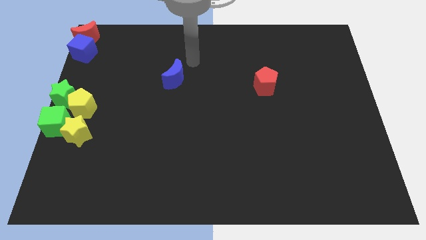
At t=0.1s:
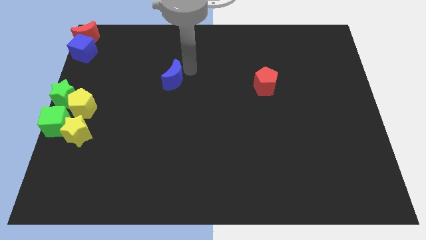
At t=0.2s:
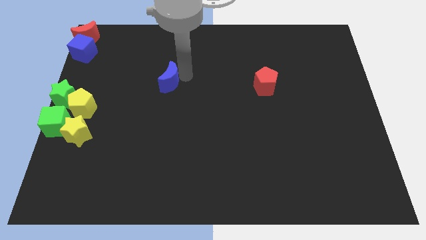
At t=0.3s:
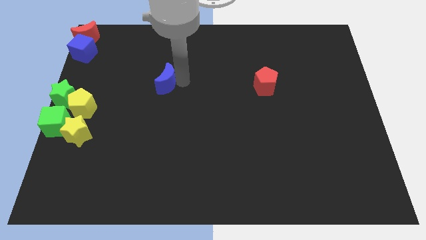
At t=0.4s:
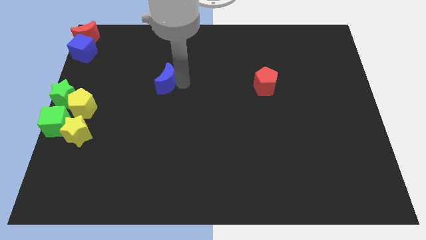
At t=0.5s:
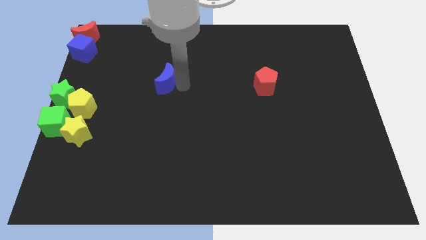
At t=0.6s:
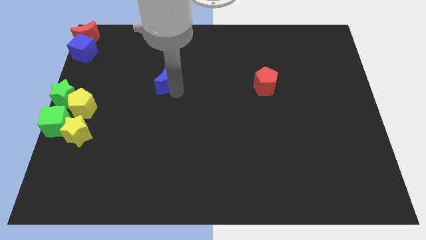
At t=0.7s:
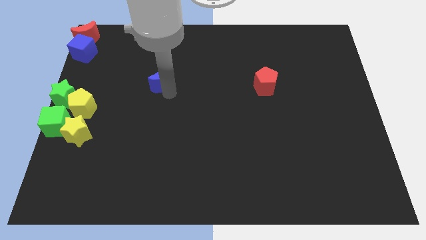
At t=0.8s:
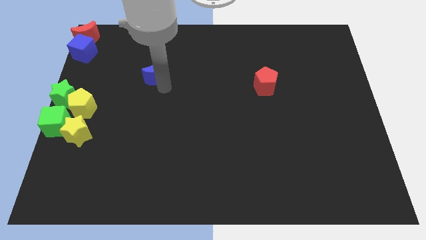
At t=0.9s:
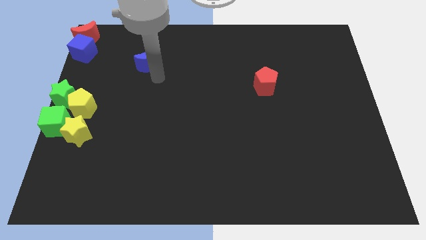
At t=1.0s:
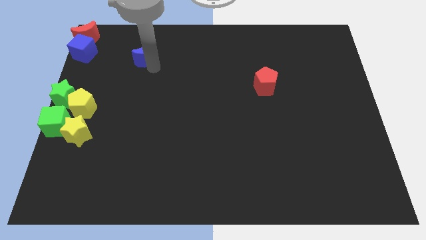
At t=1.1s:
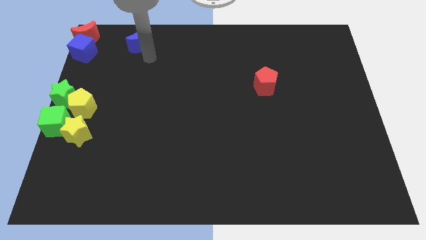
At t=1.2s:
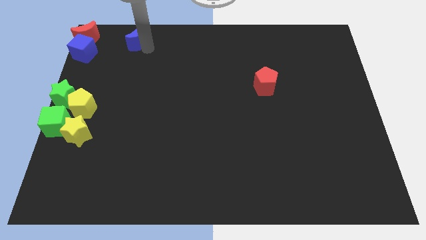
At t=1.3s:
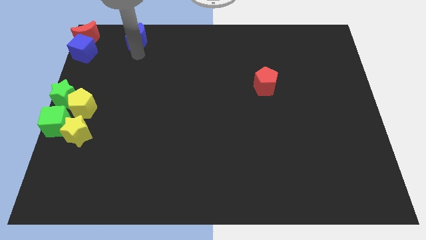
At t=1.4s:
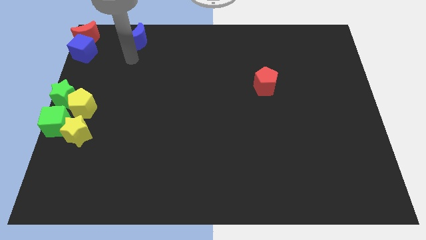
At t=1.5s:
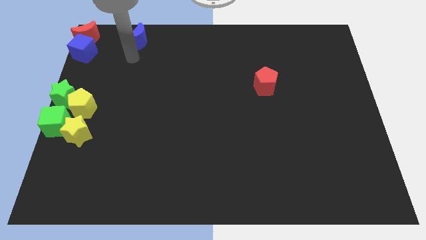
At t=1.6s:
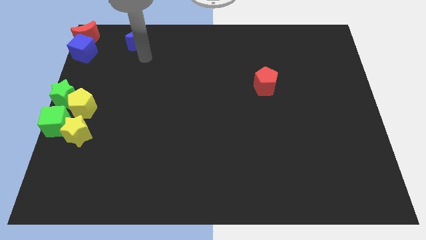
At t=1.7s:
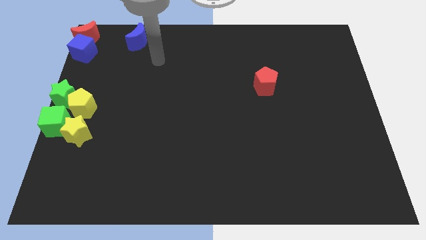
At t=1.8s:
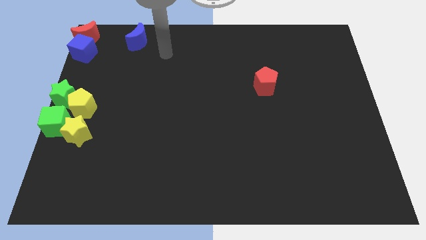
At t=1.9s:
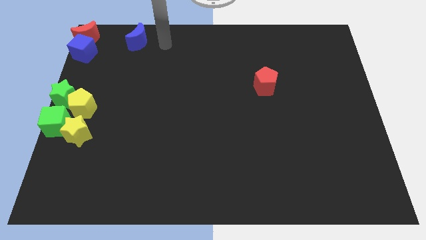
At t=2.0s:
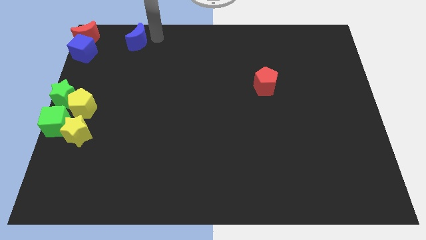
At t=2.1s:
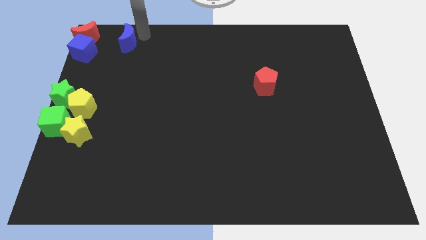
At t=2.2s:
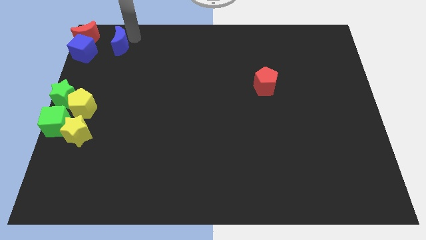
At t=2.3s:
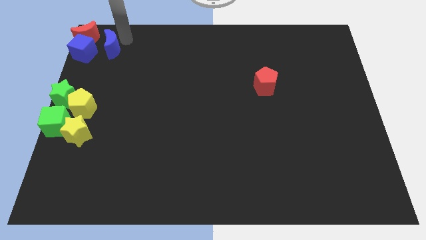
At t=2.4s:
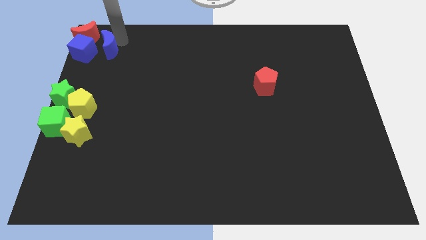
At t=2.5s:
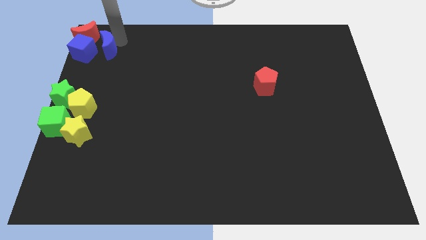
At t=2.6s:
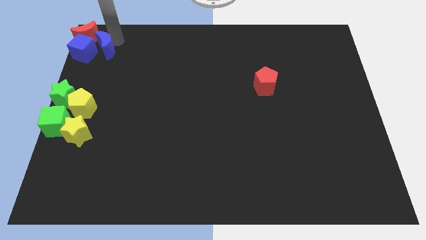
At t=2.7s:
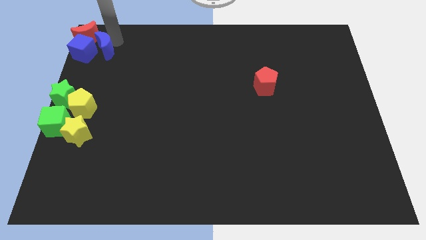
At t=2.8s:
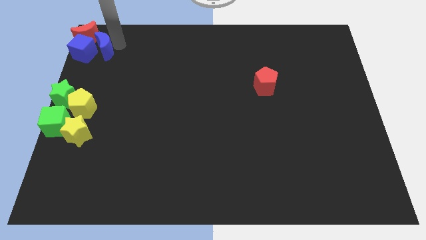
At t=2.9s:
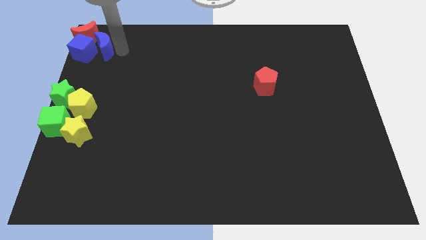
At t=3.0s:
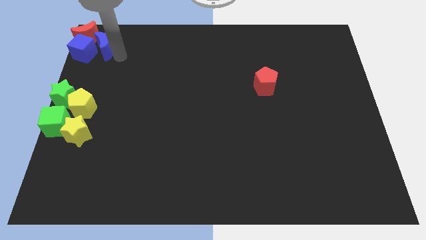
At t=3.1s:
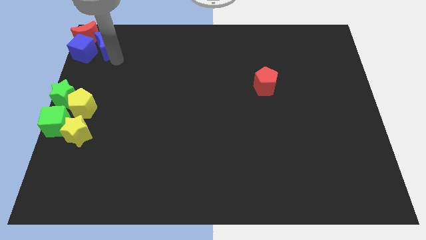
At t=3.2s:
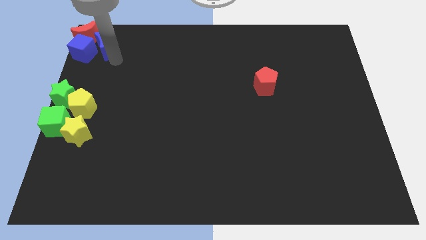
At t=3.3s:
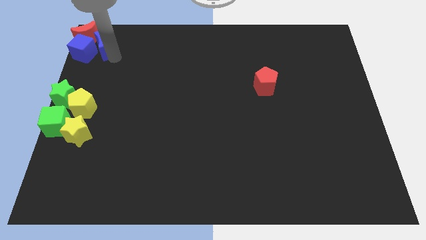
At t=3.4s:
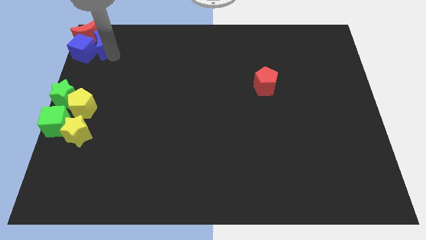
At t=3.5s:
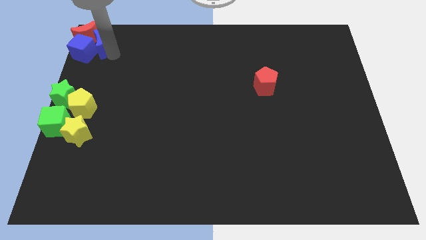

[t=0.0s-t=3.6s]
push the blue crescent into the blue cube

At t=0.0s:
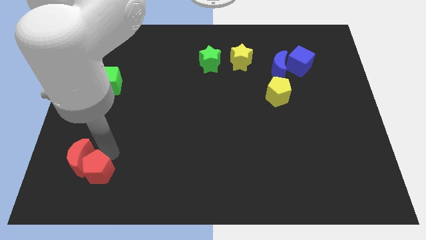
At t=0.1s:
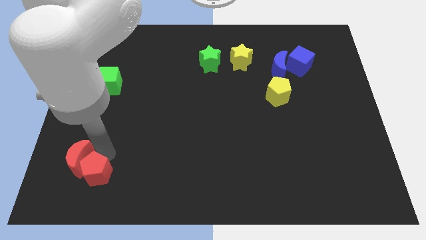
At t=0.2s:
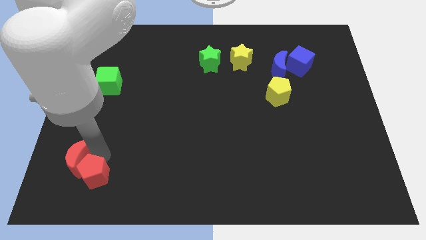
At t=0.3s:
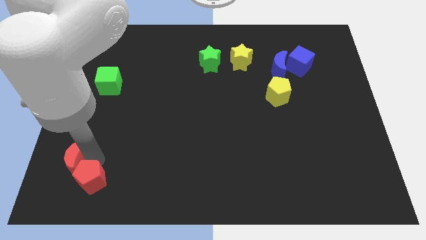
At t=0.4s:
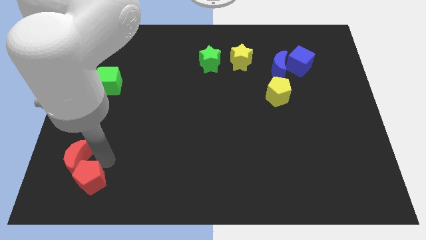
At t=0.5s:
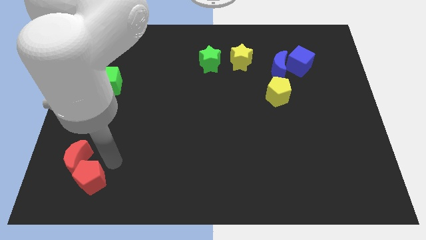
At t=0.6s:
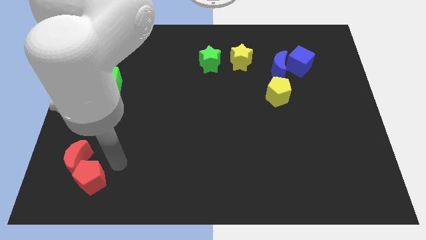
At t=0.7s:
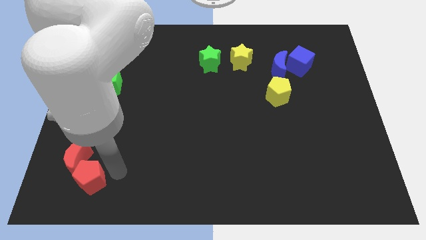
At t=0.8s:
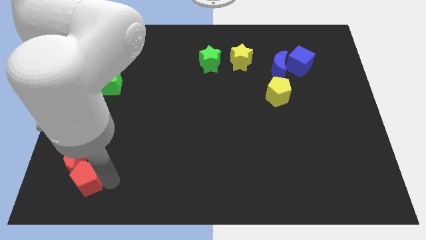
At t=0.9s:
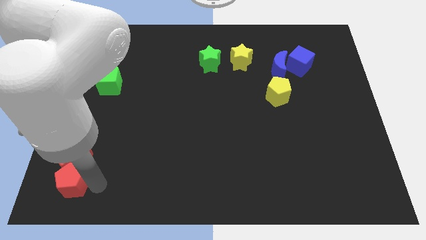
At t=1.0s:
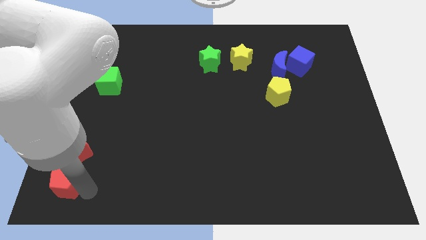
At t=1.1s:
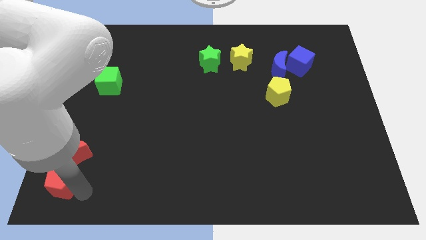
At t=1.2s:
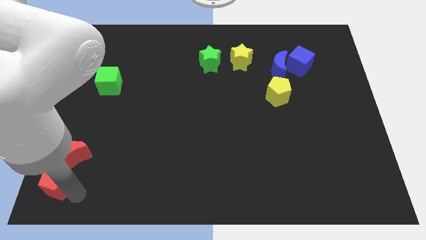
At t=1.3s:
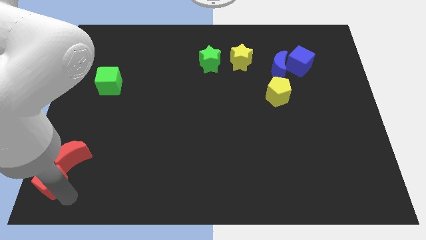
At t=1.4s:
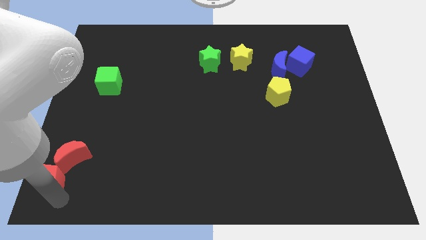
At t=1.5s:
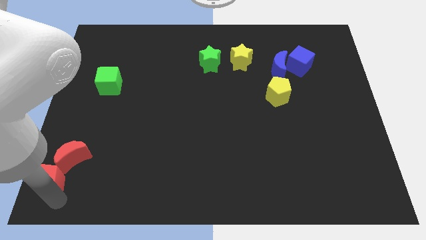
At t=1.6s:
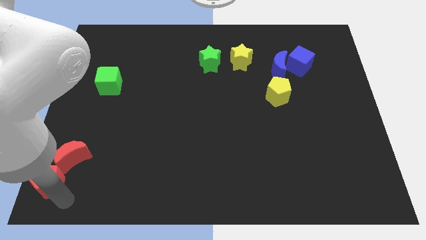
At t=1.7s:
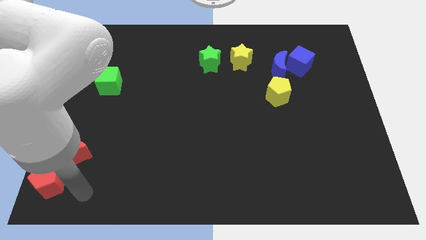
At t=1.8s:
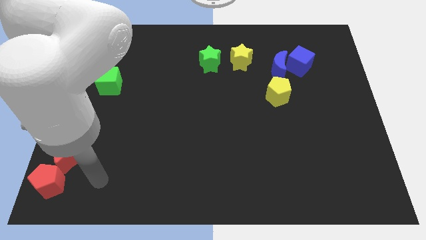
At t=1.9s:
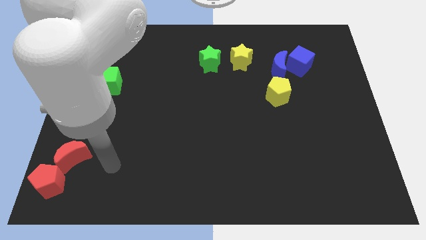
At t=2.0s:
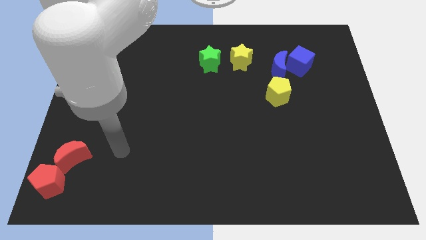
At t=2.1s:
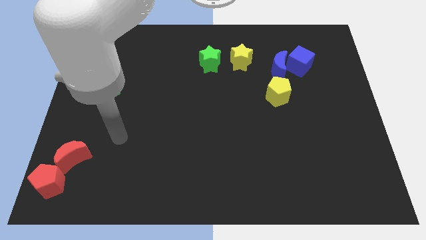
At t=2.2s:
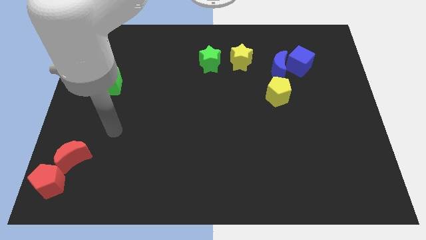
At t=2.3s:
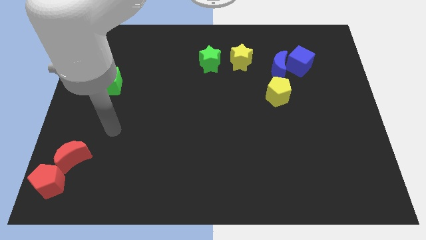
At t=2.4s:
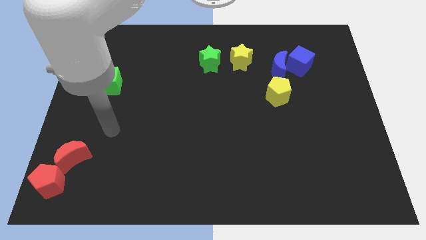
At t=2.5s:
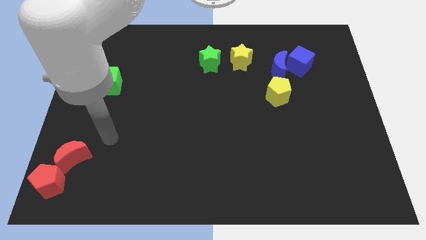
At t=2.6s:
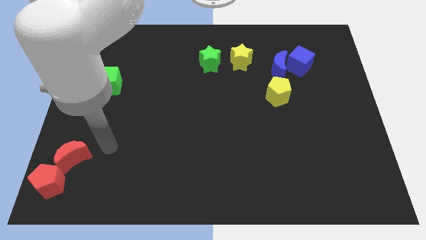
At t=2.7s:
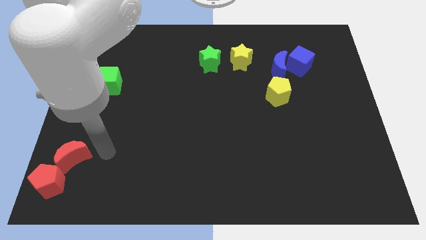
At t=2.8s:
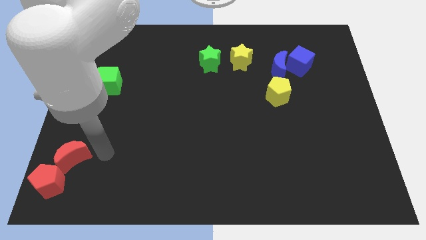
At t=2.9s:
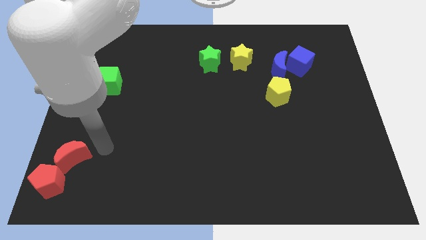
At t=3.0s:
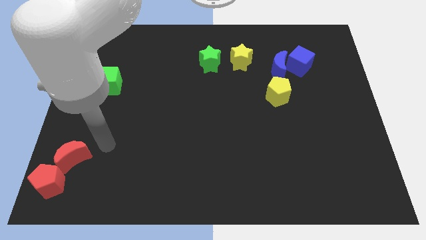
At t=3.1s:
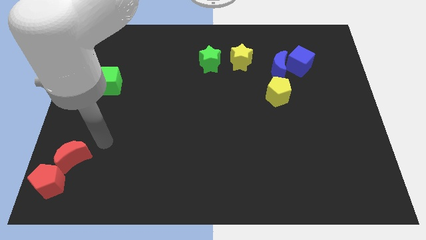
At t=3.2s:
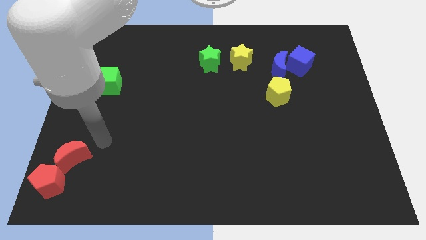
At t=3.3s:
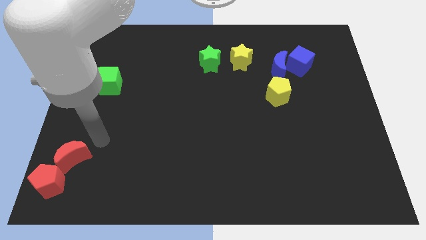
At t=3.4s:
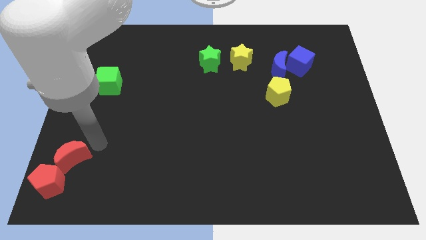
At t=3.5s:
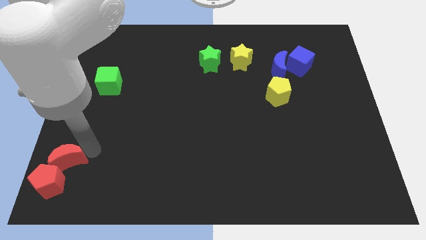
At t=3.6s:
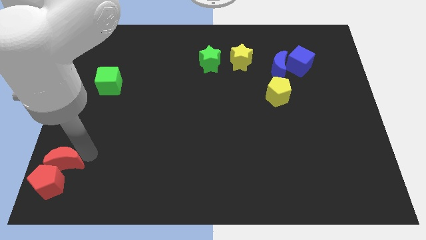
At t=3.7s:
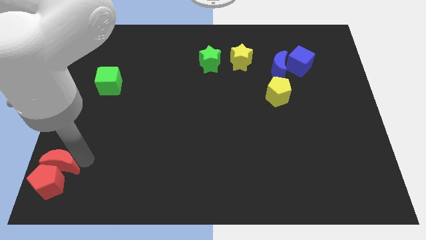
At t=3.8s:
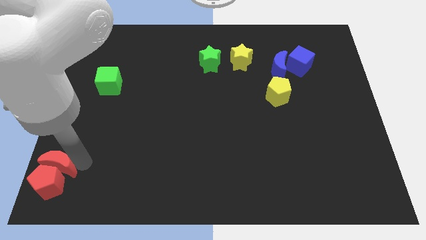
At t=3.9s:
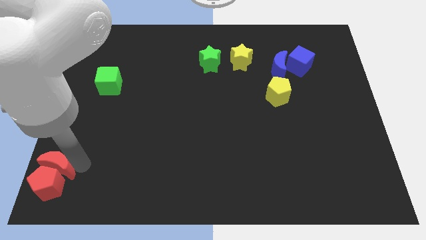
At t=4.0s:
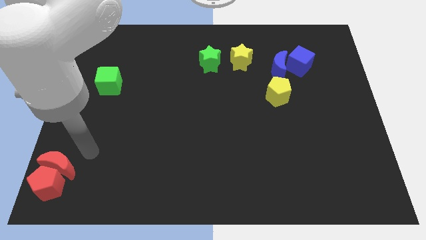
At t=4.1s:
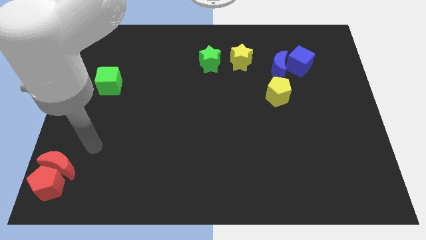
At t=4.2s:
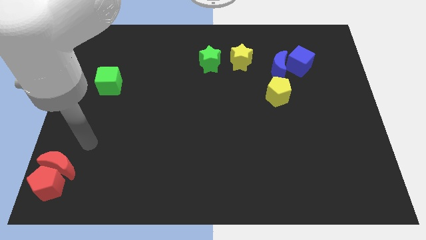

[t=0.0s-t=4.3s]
place red pentagon and the red moon at the bottom left corner

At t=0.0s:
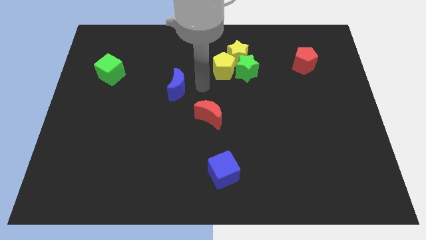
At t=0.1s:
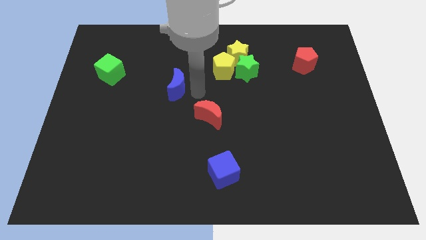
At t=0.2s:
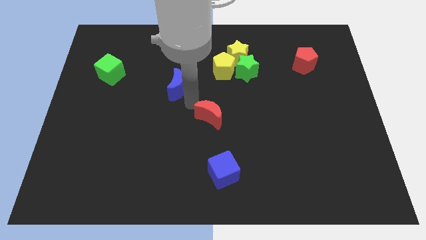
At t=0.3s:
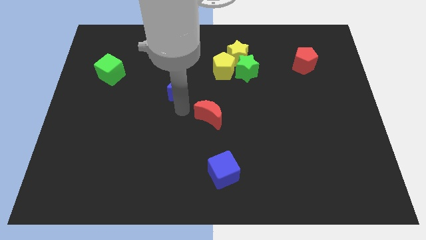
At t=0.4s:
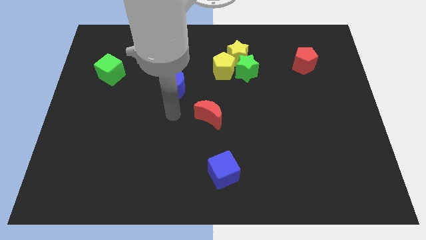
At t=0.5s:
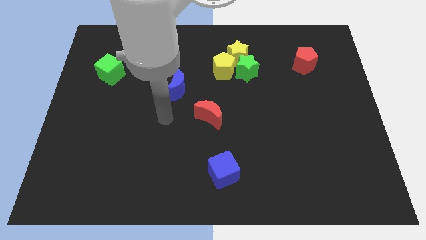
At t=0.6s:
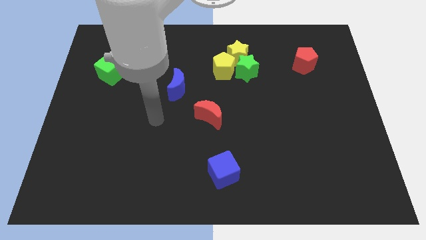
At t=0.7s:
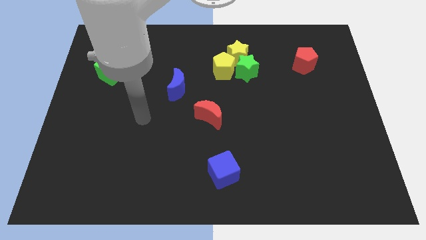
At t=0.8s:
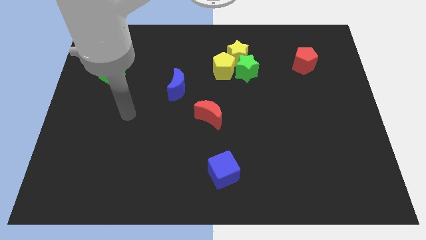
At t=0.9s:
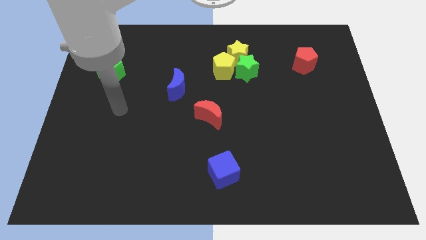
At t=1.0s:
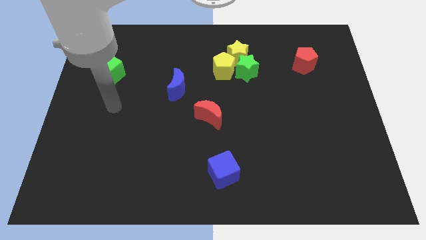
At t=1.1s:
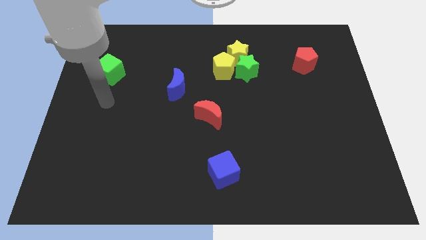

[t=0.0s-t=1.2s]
move your arm below the green cube
